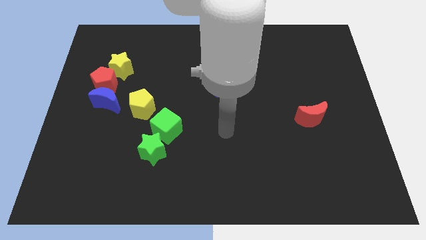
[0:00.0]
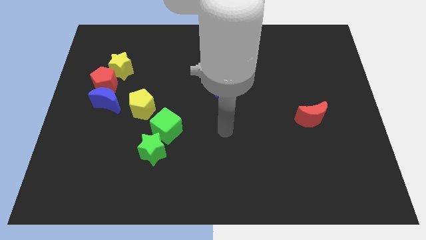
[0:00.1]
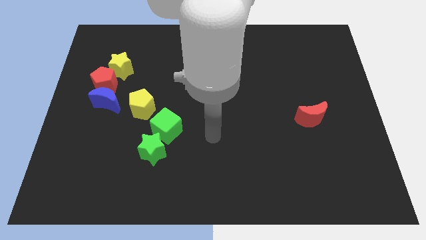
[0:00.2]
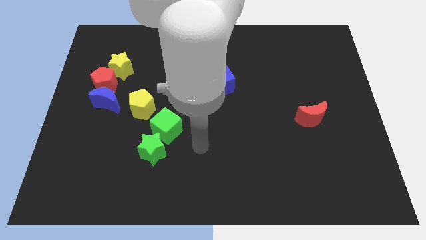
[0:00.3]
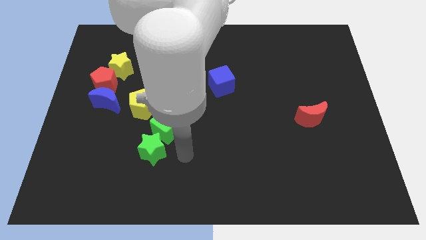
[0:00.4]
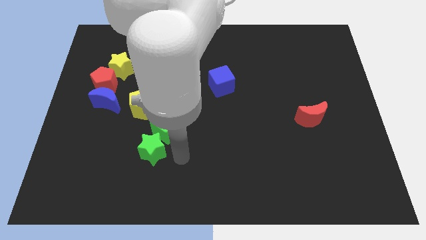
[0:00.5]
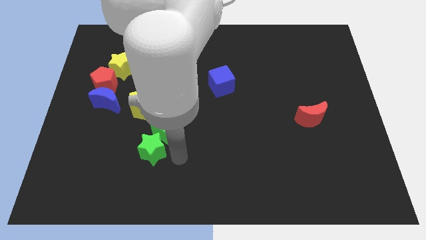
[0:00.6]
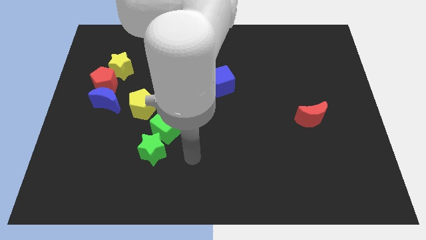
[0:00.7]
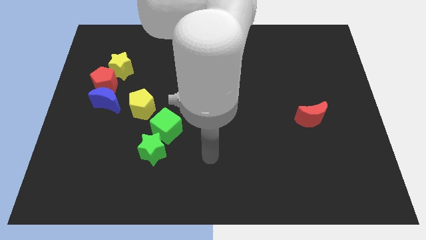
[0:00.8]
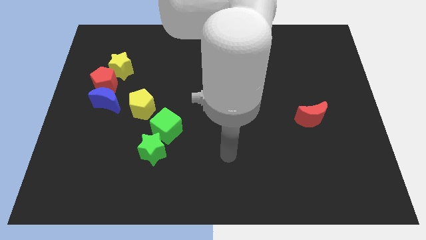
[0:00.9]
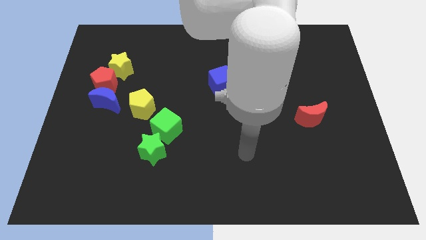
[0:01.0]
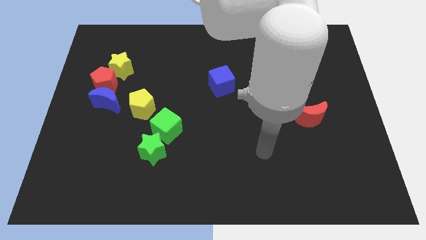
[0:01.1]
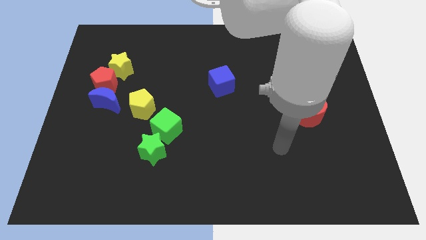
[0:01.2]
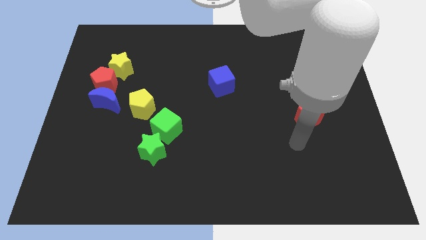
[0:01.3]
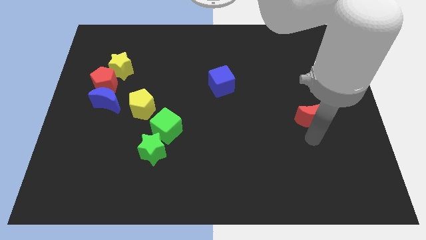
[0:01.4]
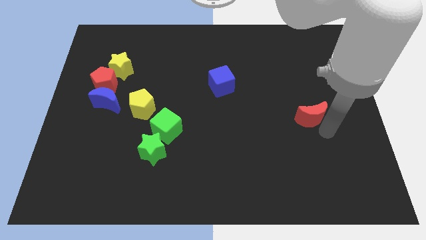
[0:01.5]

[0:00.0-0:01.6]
move your arm towards the right side of the board

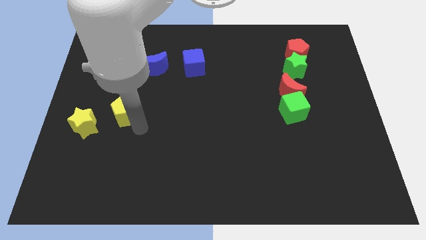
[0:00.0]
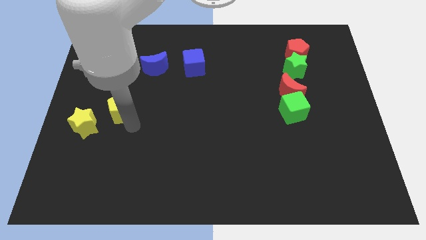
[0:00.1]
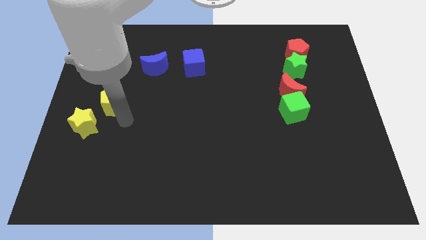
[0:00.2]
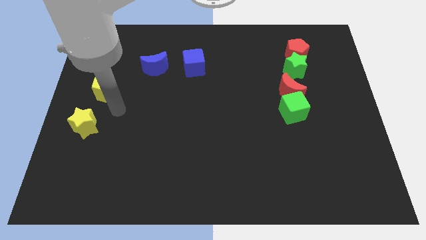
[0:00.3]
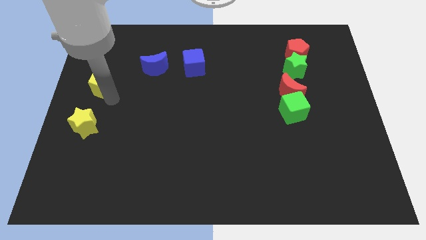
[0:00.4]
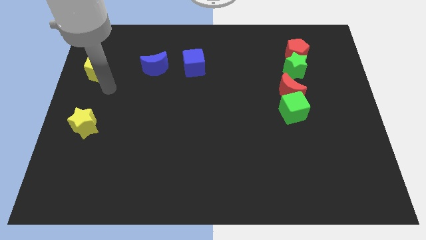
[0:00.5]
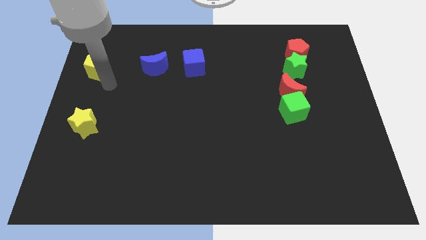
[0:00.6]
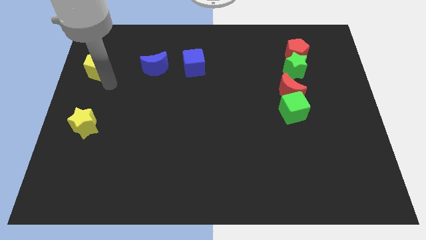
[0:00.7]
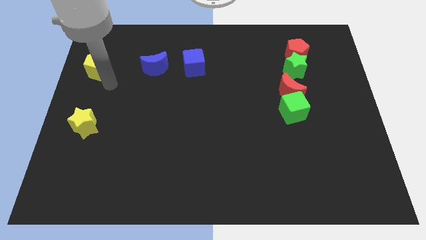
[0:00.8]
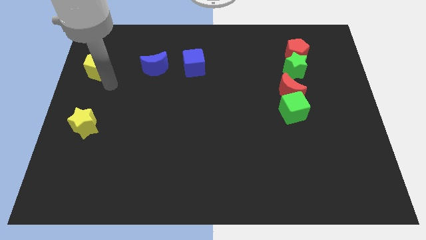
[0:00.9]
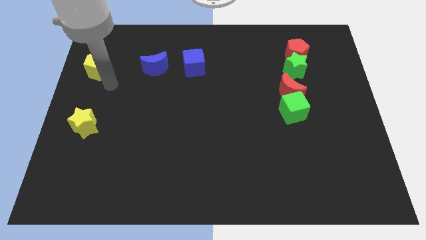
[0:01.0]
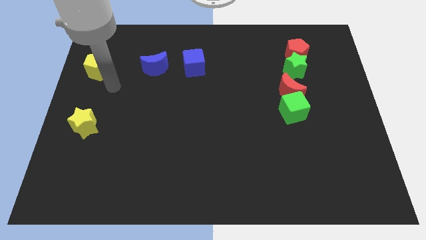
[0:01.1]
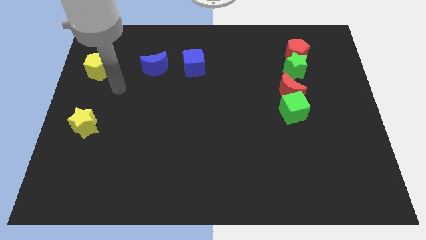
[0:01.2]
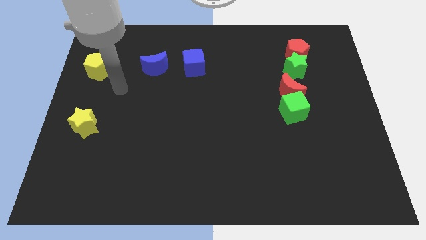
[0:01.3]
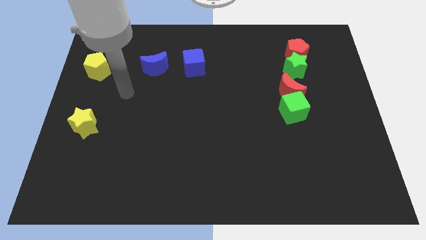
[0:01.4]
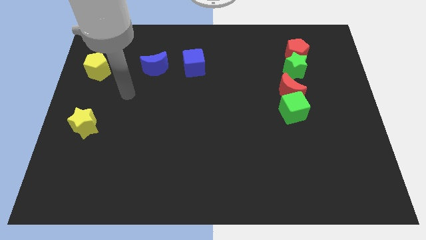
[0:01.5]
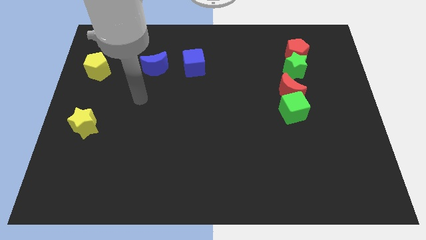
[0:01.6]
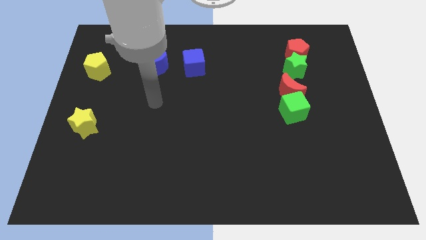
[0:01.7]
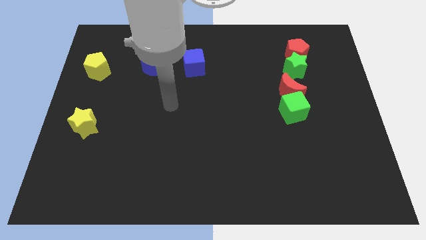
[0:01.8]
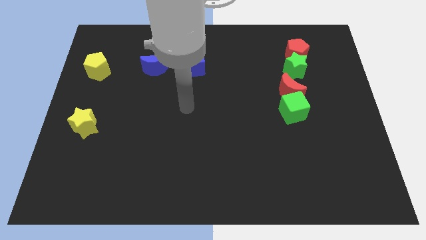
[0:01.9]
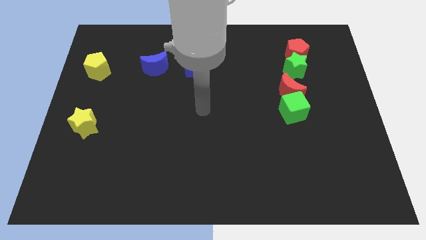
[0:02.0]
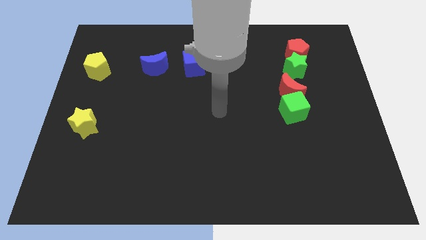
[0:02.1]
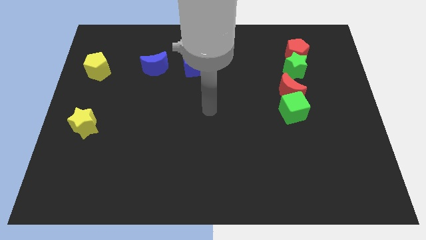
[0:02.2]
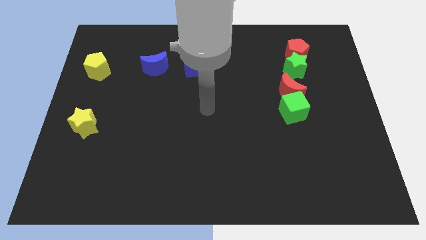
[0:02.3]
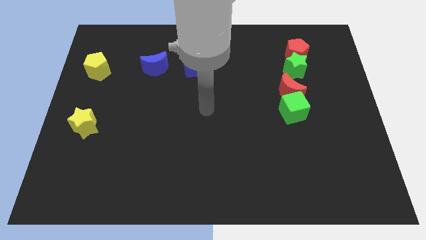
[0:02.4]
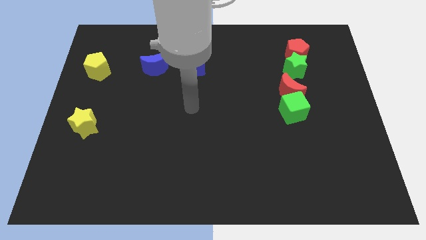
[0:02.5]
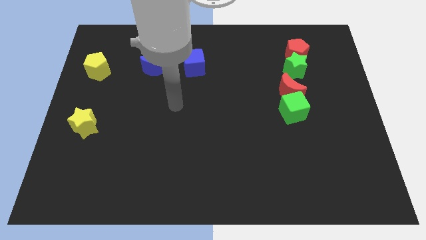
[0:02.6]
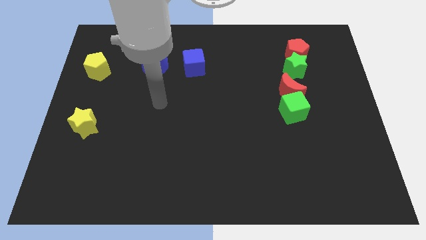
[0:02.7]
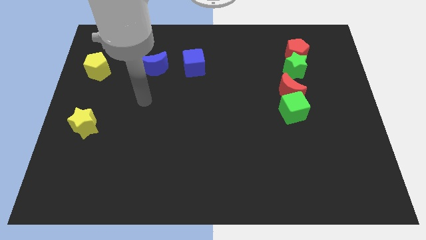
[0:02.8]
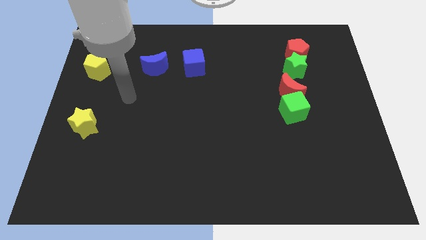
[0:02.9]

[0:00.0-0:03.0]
push the yellow pentagon left to the blue moon

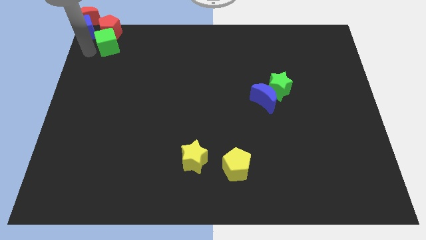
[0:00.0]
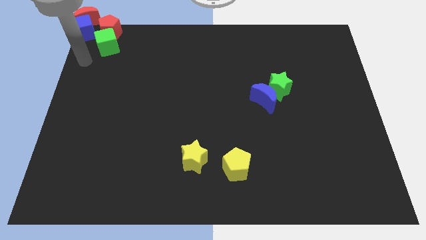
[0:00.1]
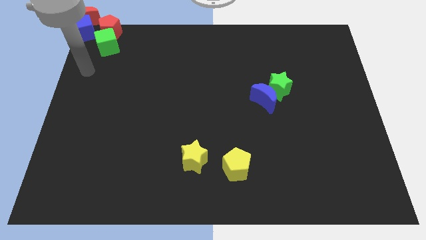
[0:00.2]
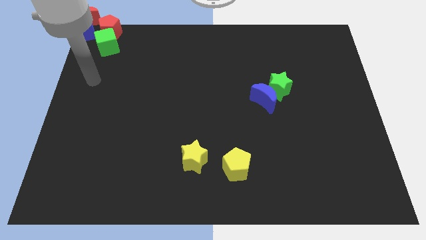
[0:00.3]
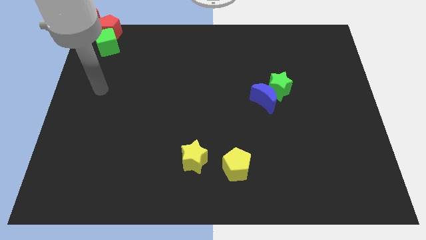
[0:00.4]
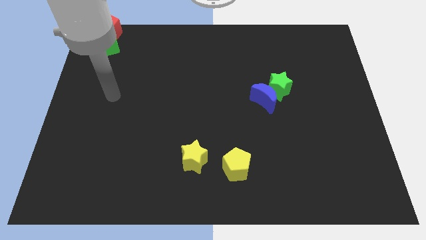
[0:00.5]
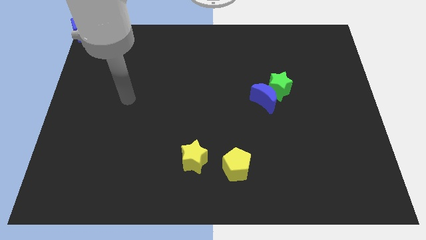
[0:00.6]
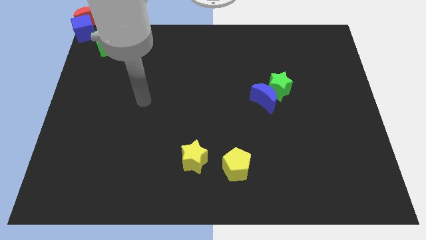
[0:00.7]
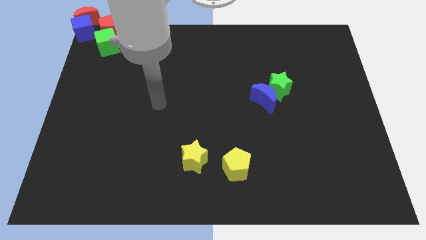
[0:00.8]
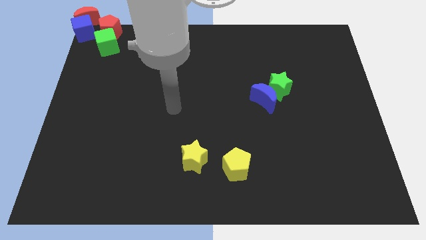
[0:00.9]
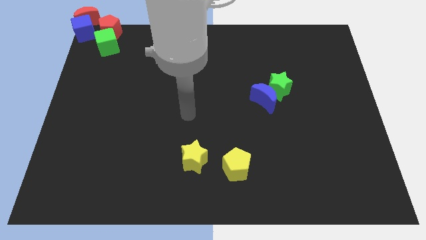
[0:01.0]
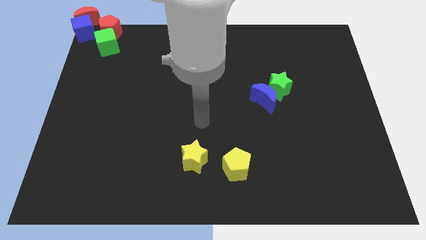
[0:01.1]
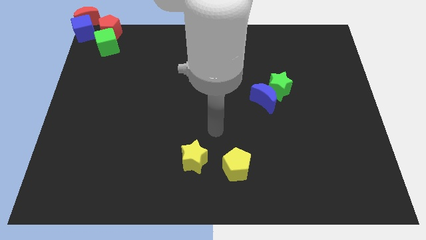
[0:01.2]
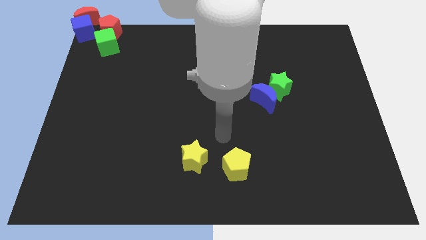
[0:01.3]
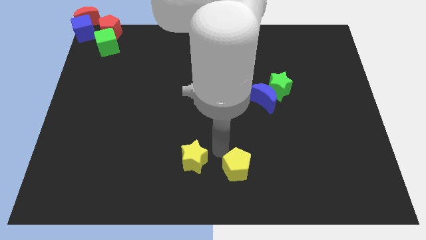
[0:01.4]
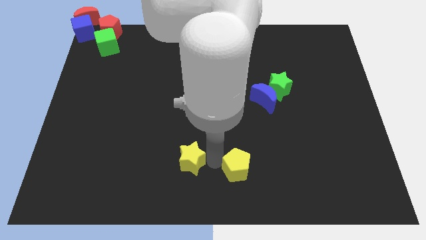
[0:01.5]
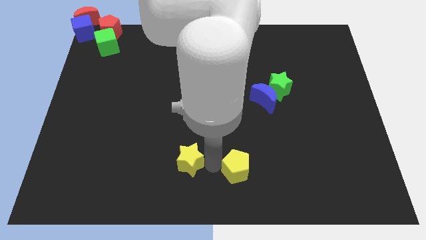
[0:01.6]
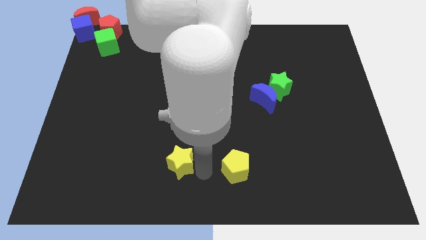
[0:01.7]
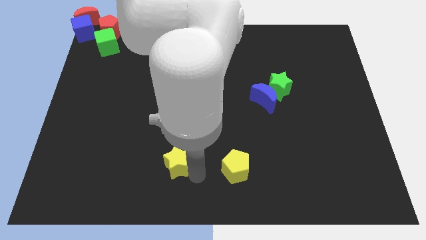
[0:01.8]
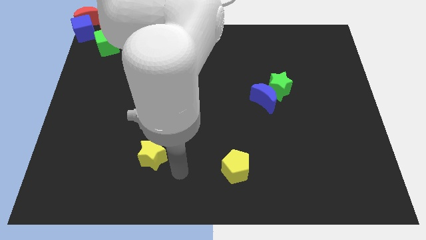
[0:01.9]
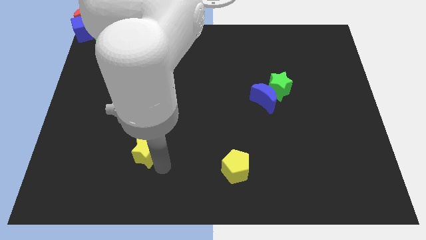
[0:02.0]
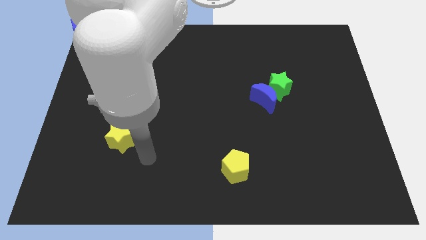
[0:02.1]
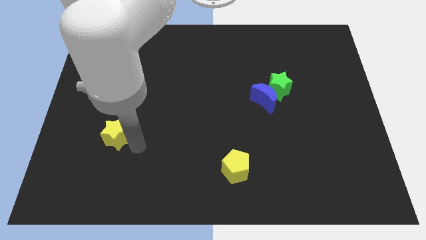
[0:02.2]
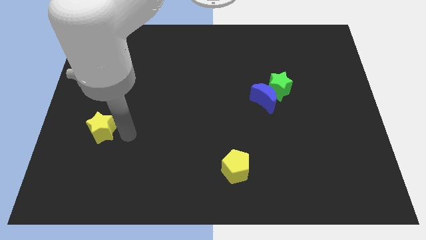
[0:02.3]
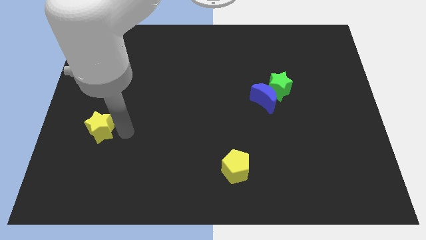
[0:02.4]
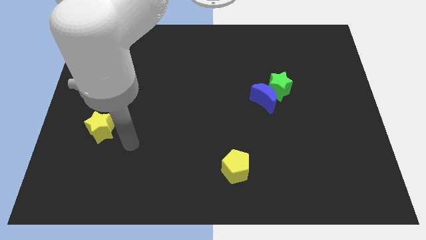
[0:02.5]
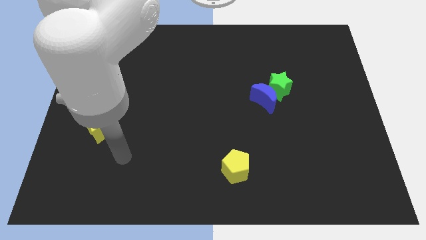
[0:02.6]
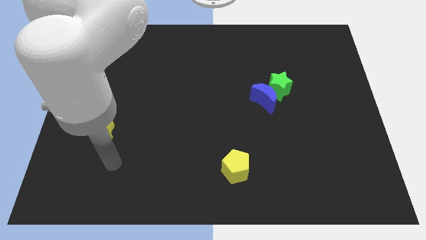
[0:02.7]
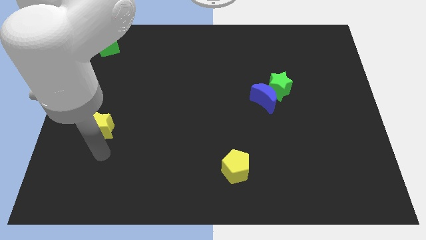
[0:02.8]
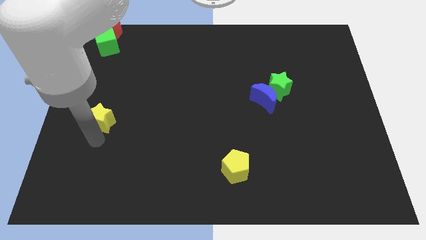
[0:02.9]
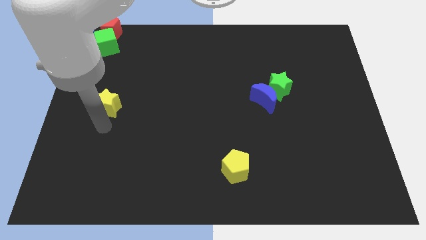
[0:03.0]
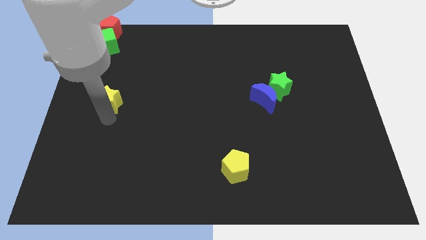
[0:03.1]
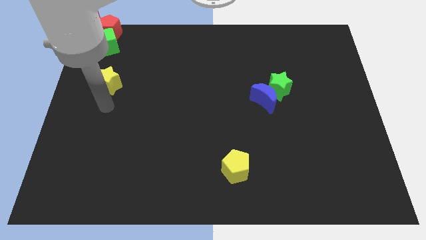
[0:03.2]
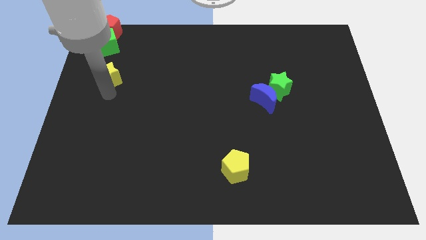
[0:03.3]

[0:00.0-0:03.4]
move the yellow star towards the bottom side of the green cube

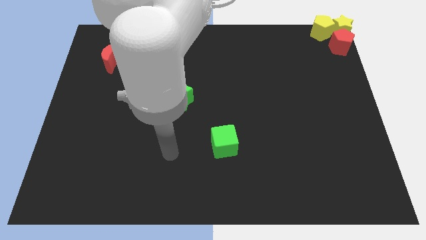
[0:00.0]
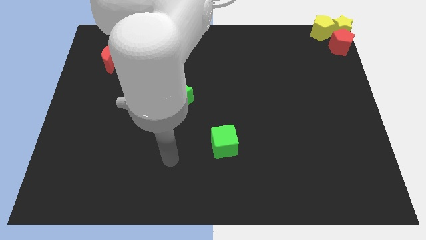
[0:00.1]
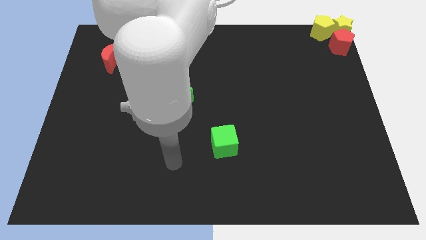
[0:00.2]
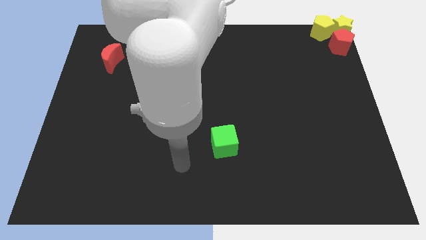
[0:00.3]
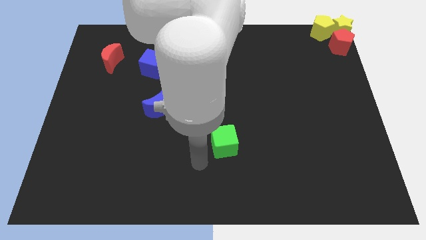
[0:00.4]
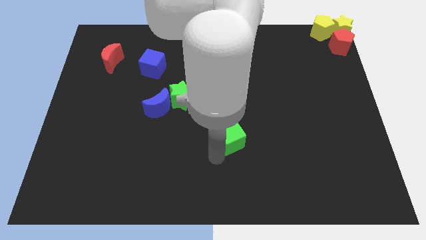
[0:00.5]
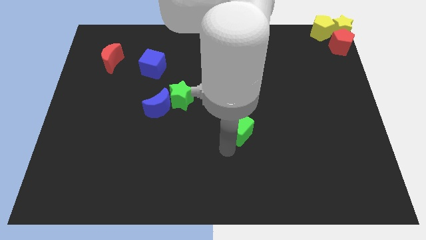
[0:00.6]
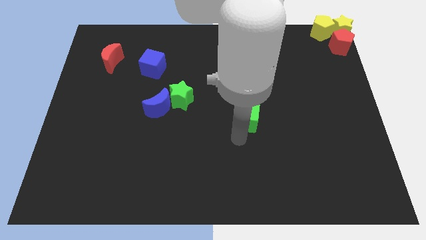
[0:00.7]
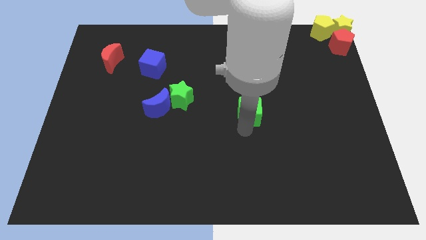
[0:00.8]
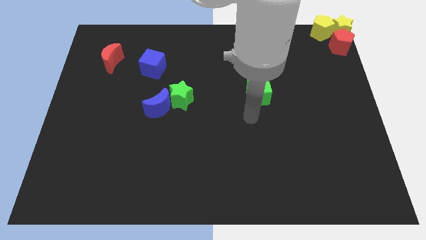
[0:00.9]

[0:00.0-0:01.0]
move the green cube to the horizontal right of the green star
